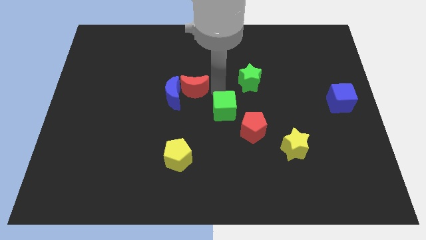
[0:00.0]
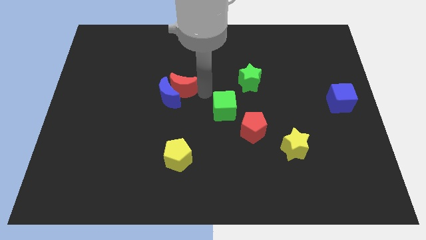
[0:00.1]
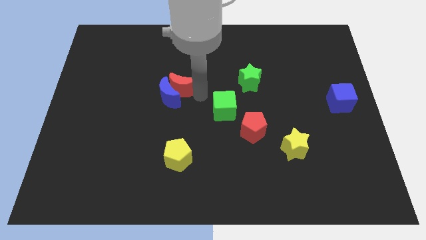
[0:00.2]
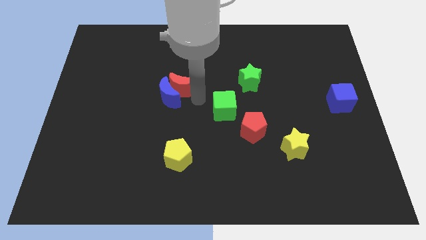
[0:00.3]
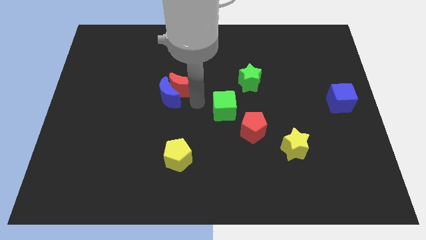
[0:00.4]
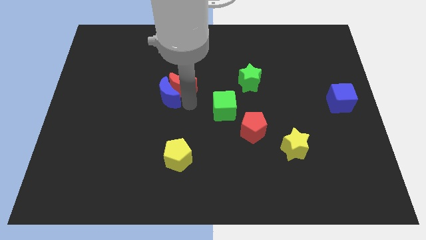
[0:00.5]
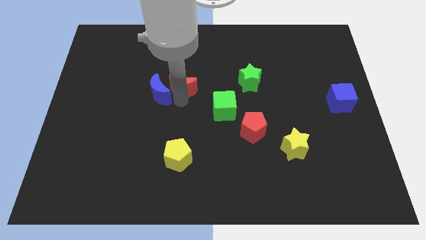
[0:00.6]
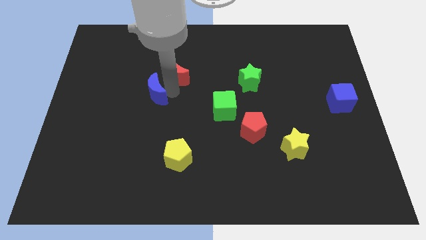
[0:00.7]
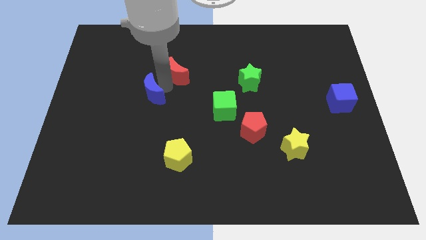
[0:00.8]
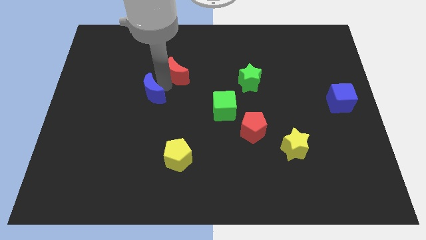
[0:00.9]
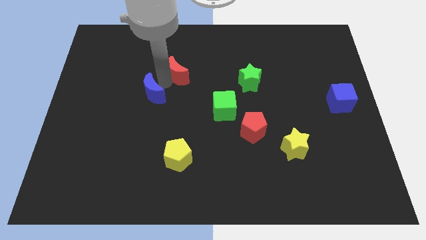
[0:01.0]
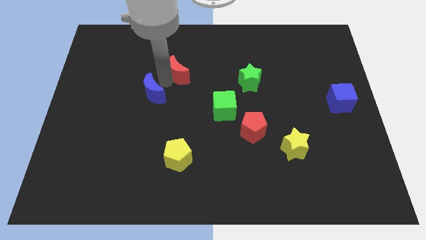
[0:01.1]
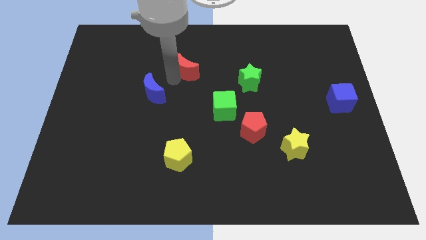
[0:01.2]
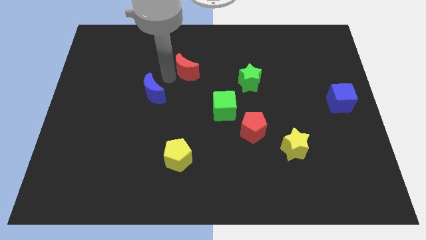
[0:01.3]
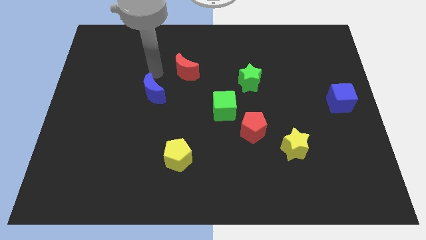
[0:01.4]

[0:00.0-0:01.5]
push the red crescent away from the blue crescent

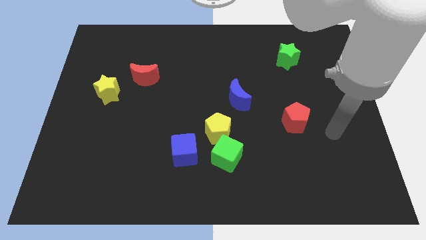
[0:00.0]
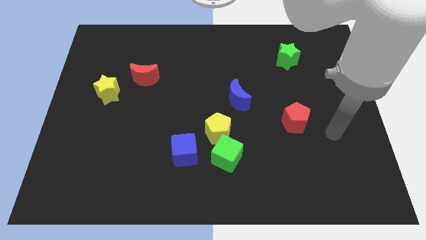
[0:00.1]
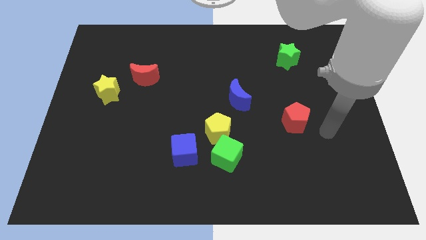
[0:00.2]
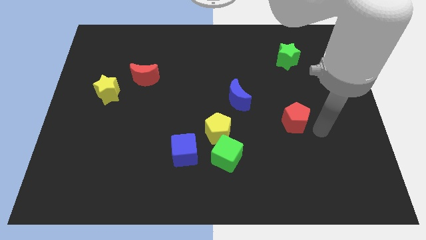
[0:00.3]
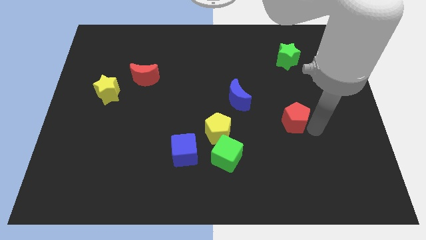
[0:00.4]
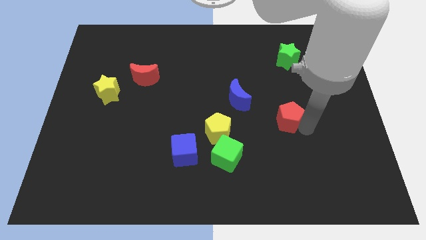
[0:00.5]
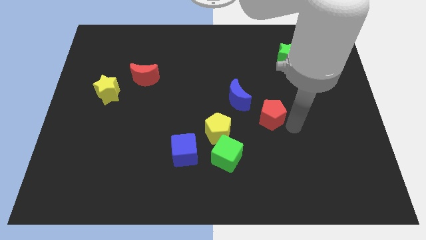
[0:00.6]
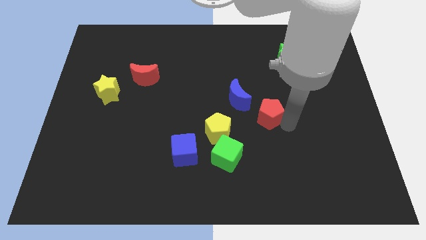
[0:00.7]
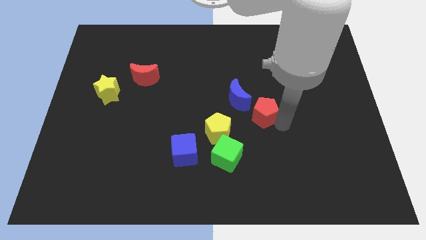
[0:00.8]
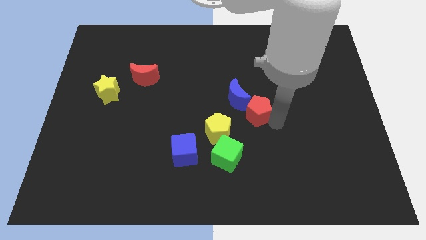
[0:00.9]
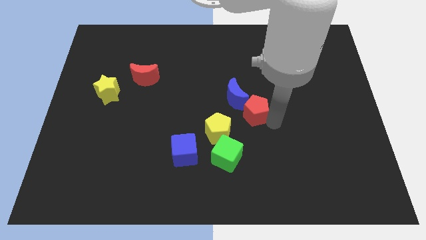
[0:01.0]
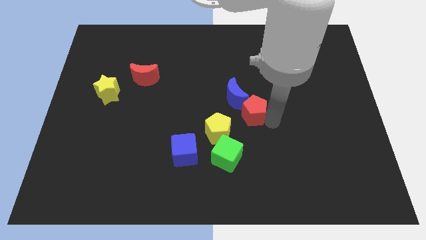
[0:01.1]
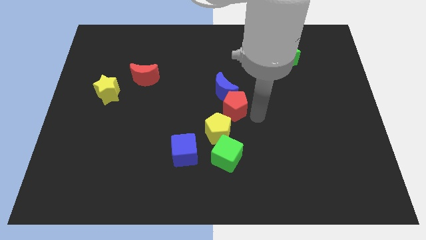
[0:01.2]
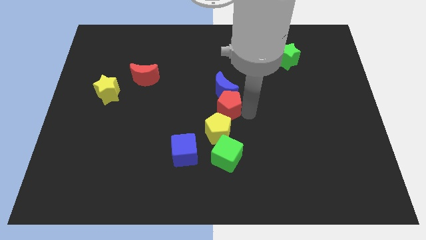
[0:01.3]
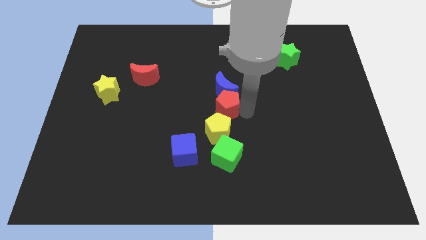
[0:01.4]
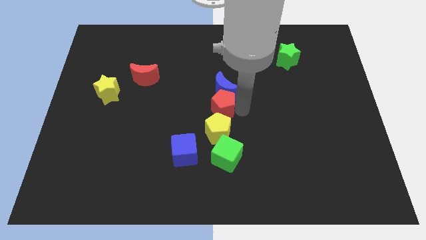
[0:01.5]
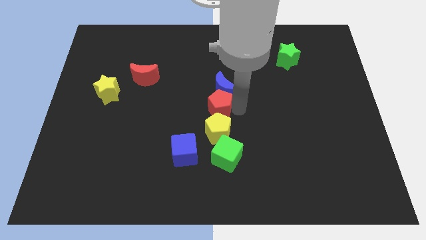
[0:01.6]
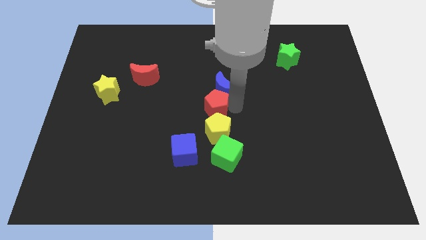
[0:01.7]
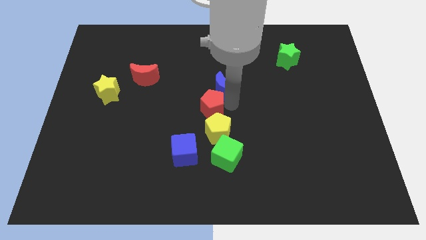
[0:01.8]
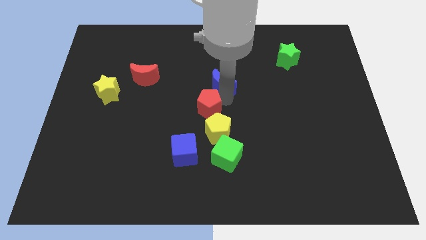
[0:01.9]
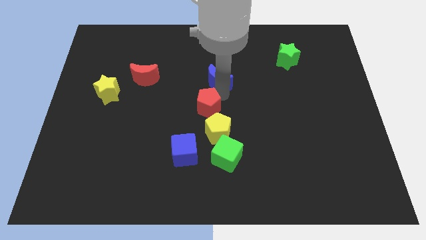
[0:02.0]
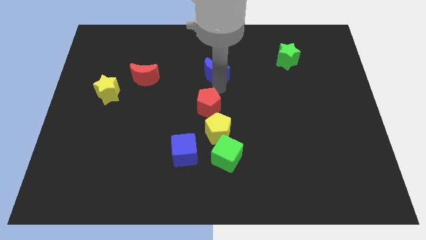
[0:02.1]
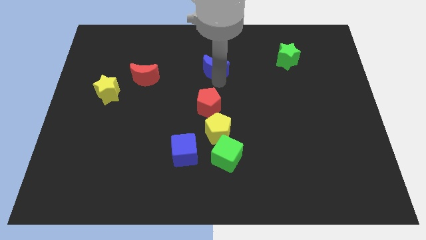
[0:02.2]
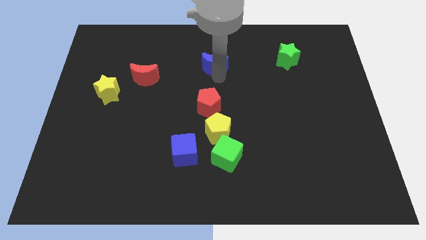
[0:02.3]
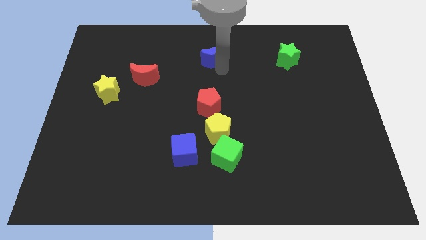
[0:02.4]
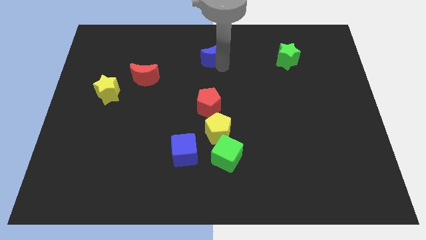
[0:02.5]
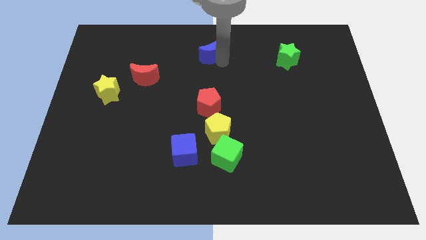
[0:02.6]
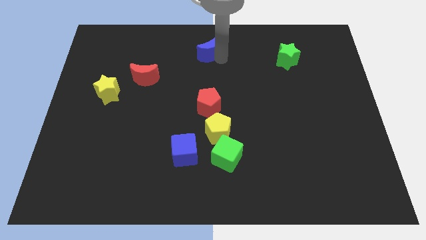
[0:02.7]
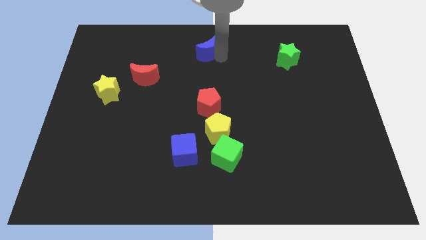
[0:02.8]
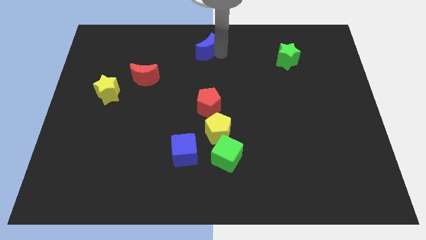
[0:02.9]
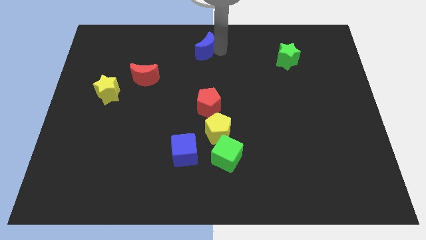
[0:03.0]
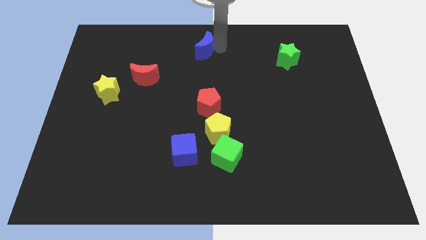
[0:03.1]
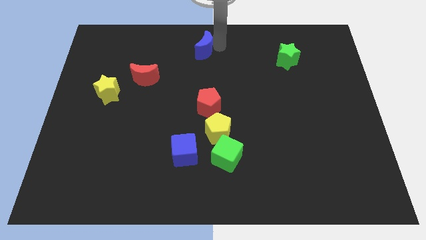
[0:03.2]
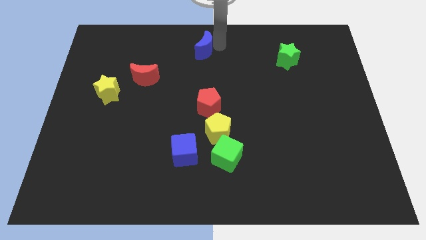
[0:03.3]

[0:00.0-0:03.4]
place the blue moon to the top center of the board

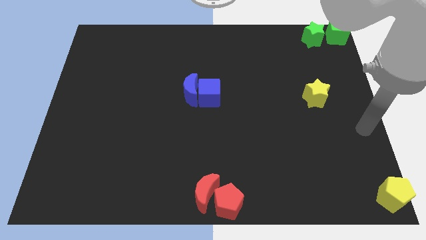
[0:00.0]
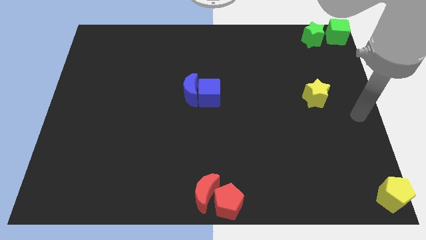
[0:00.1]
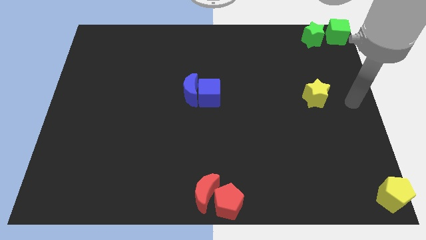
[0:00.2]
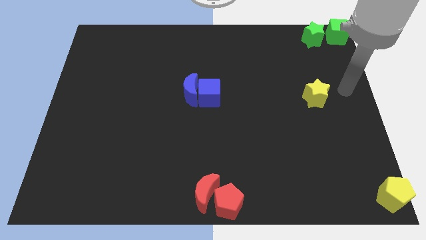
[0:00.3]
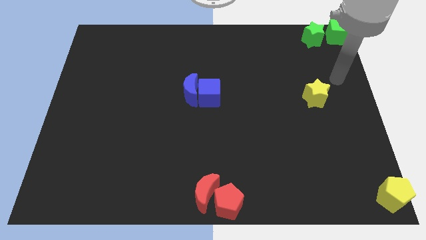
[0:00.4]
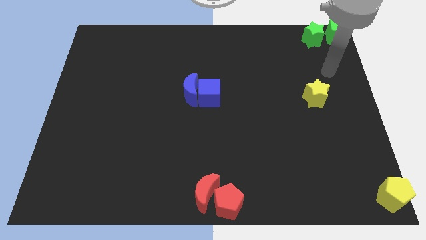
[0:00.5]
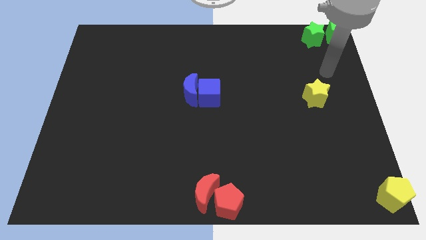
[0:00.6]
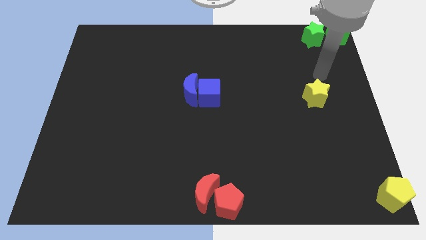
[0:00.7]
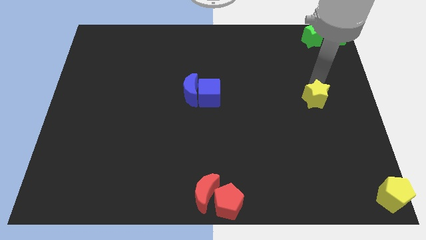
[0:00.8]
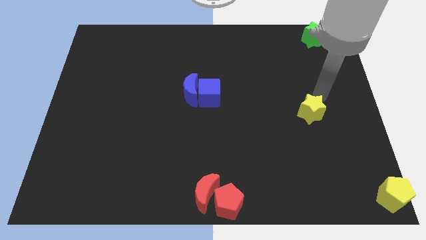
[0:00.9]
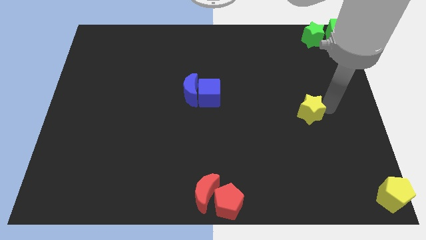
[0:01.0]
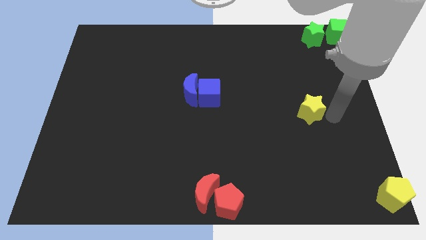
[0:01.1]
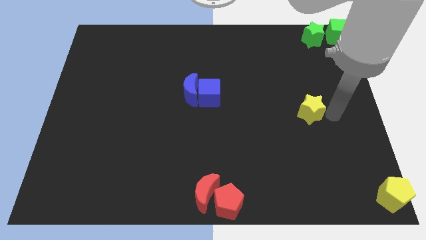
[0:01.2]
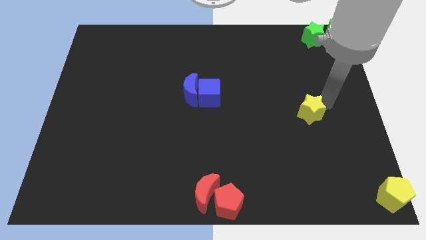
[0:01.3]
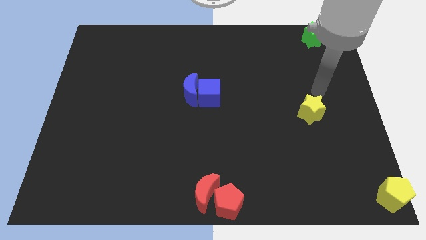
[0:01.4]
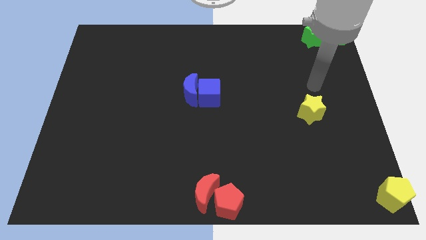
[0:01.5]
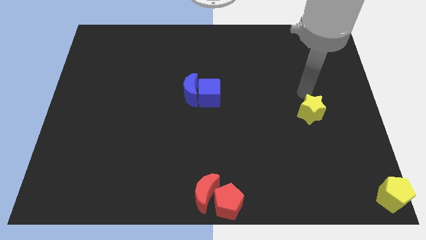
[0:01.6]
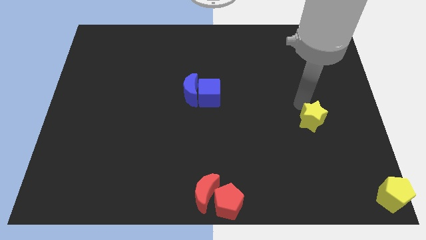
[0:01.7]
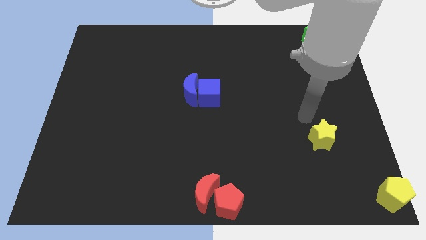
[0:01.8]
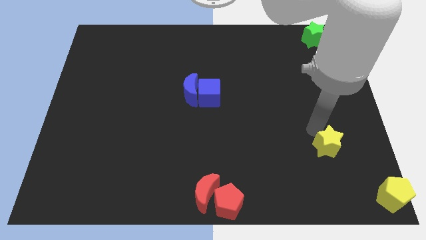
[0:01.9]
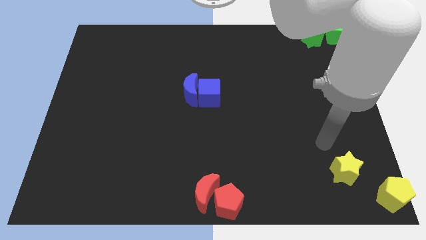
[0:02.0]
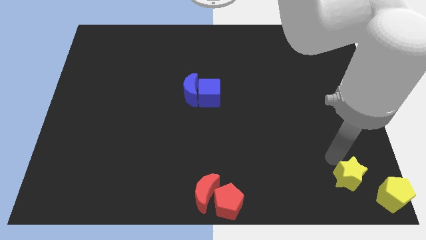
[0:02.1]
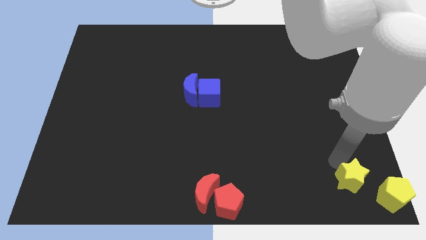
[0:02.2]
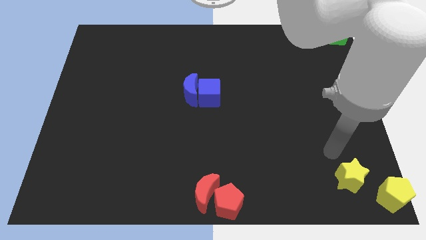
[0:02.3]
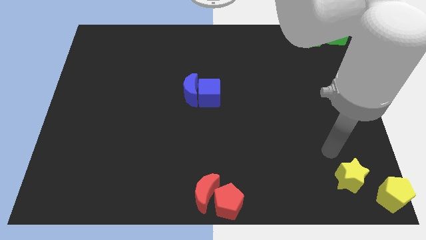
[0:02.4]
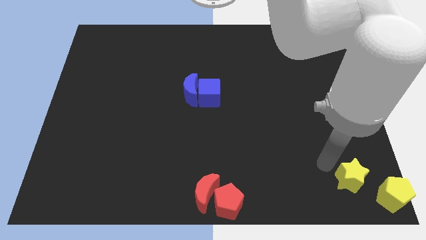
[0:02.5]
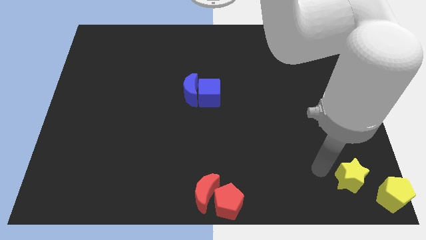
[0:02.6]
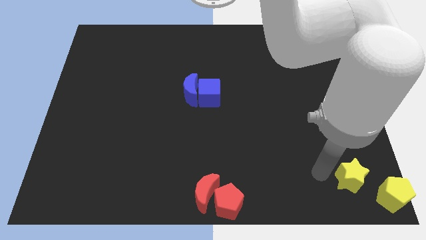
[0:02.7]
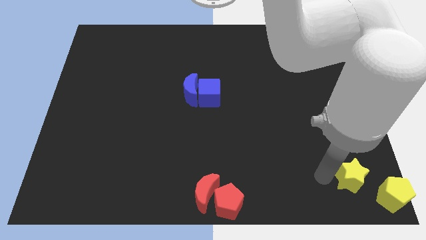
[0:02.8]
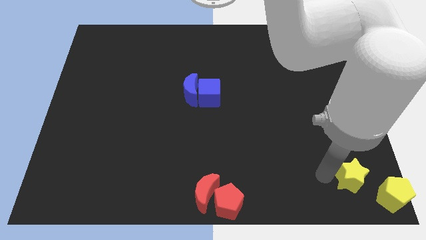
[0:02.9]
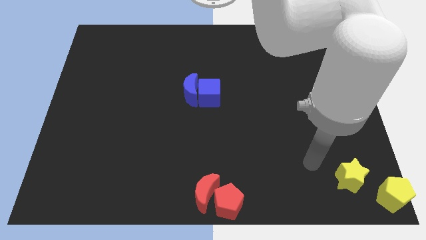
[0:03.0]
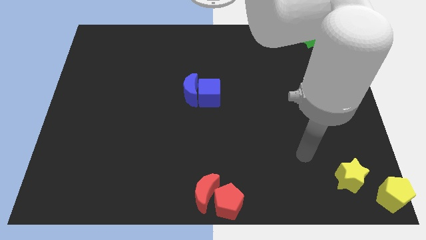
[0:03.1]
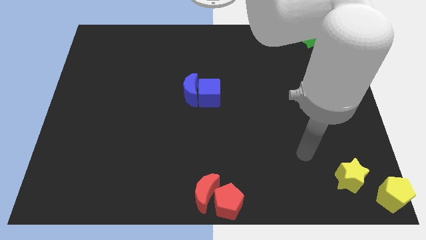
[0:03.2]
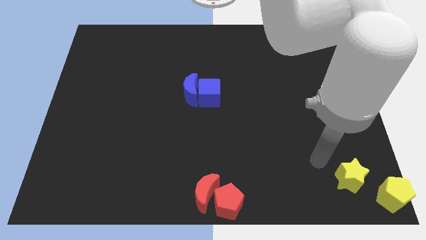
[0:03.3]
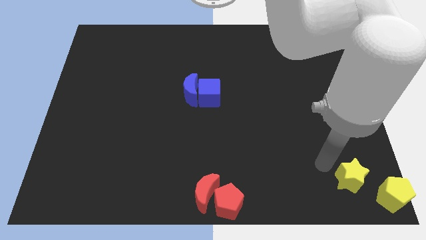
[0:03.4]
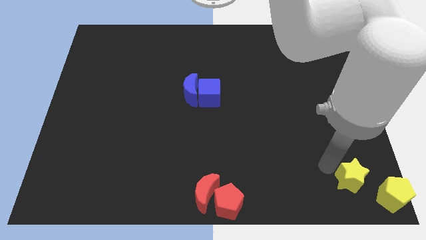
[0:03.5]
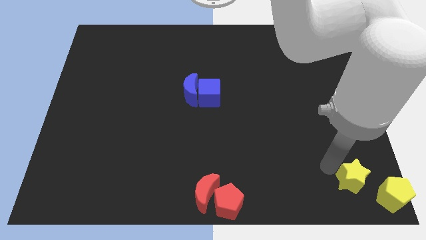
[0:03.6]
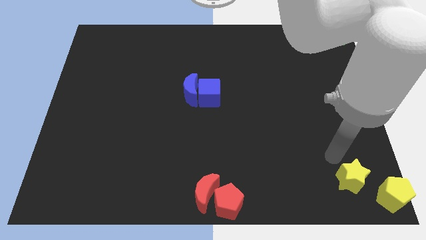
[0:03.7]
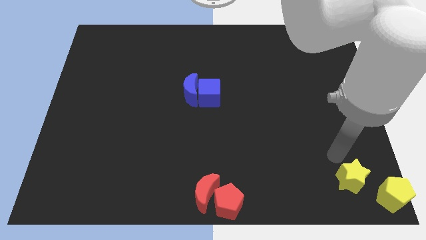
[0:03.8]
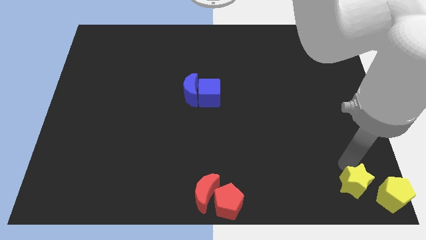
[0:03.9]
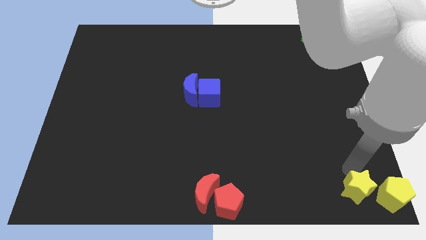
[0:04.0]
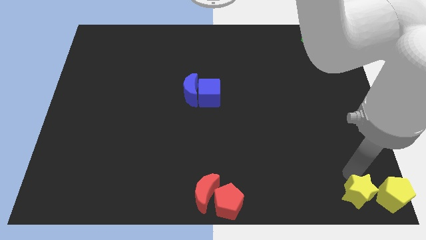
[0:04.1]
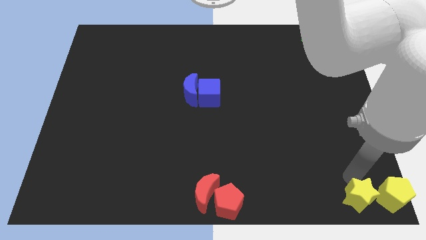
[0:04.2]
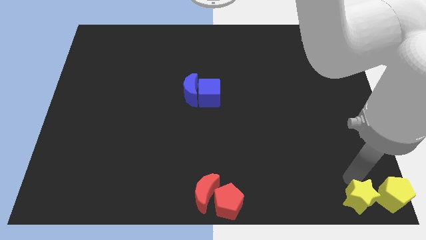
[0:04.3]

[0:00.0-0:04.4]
push the yellow star to the left of the yellow pentagon
